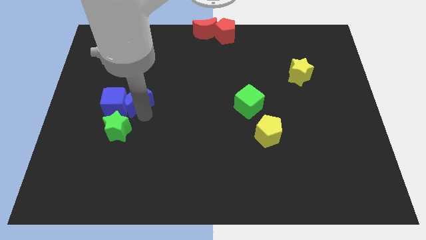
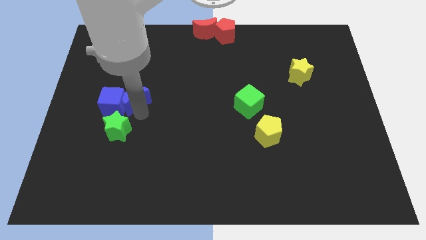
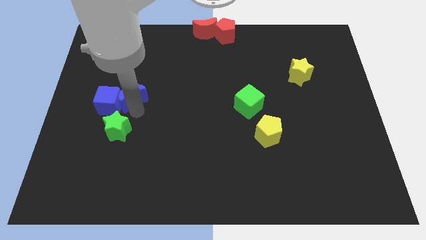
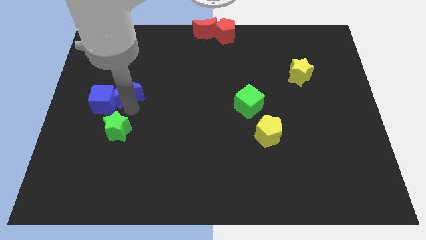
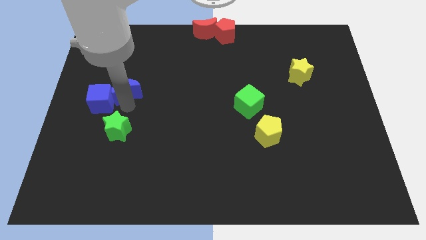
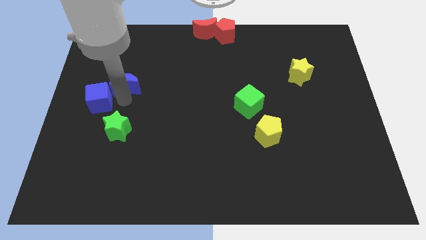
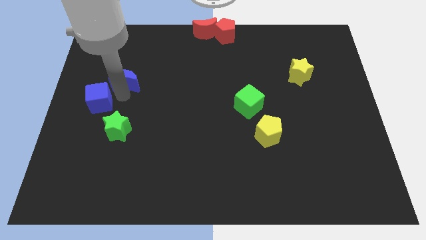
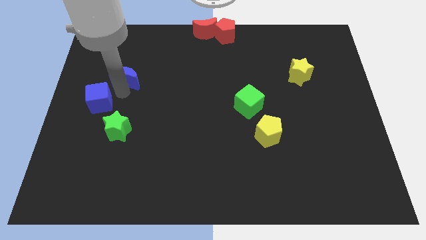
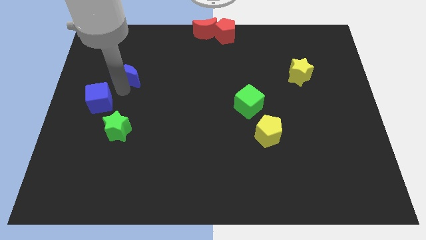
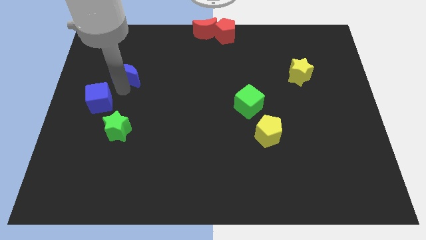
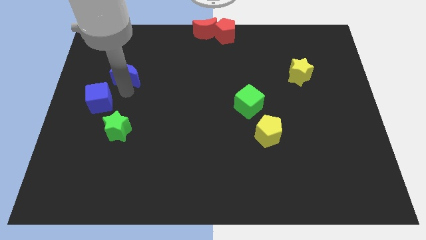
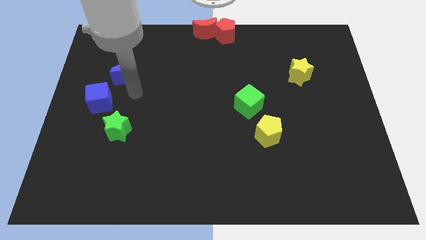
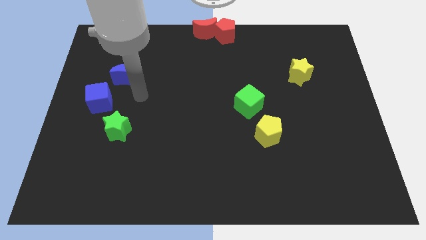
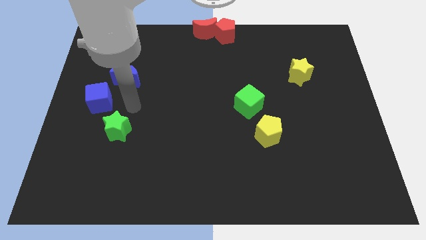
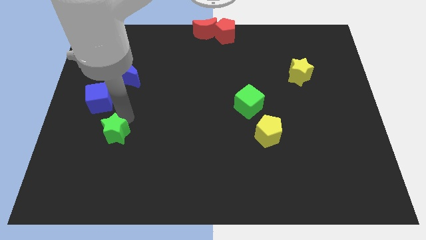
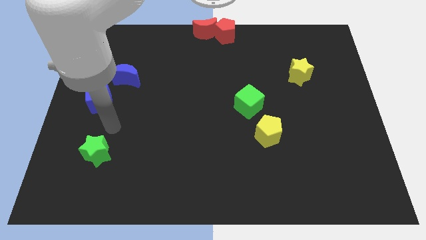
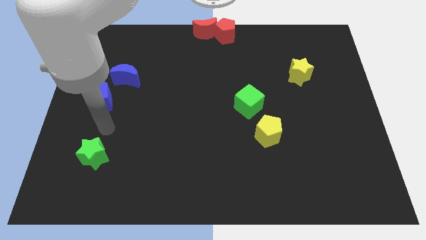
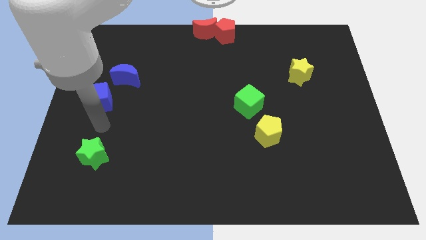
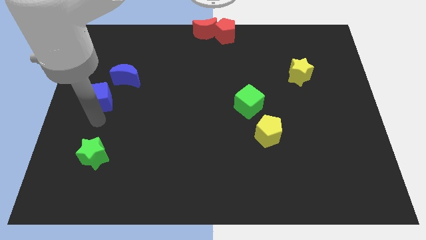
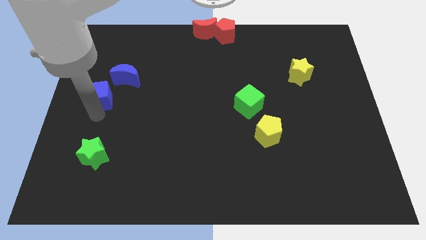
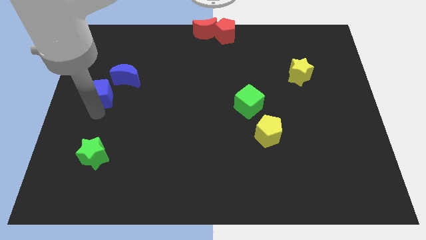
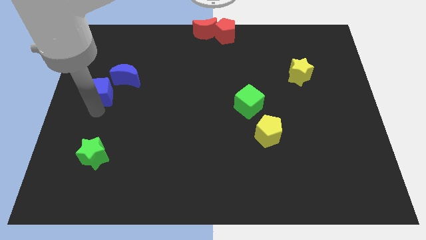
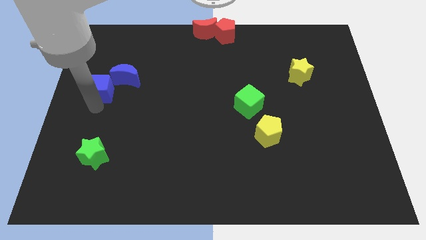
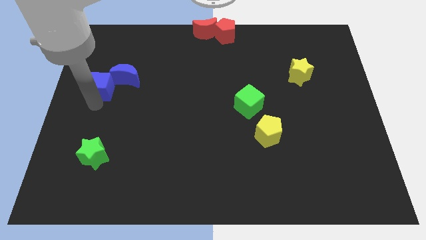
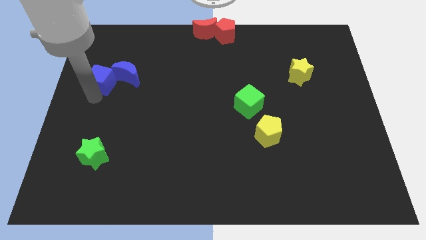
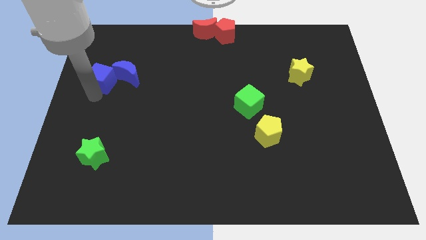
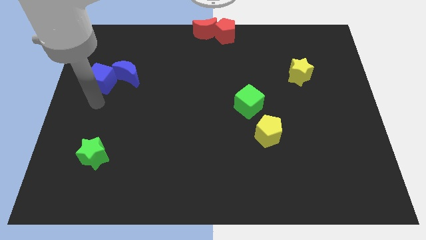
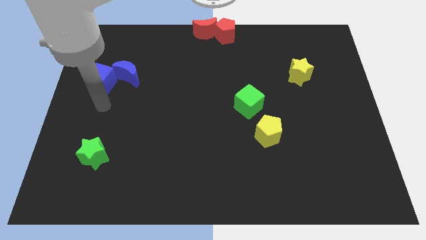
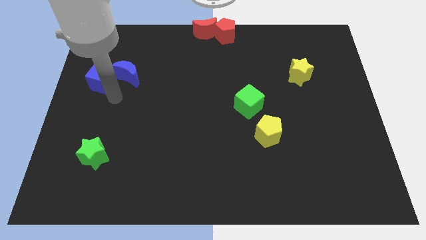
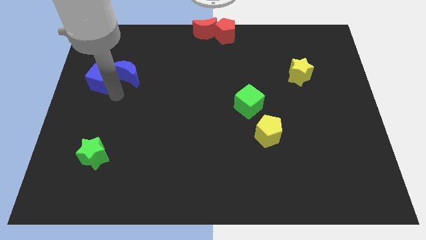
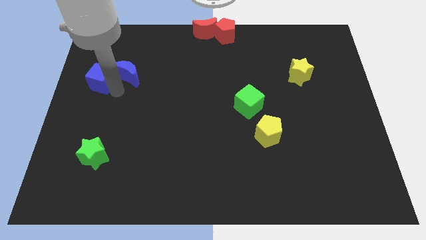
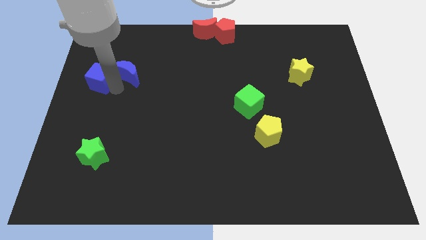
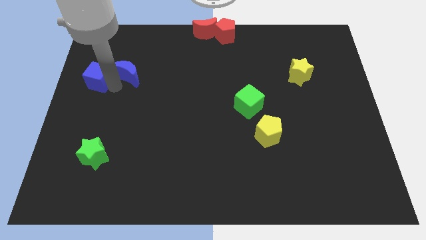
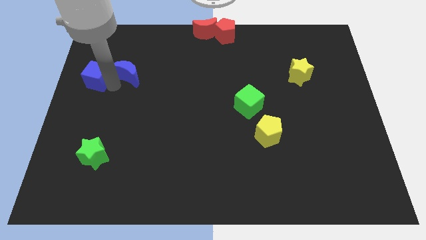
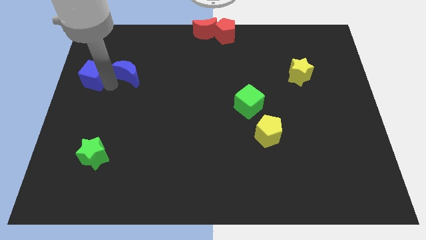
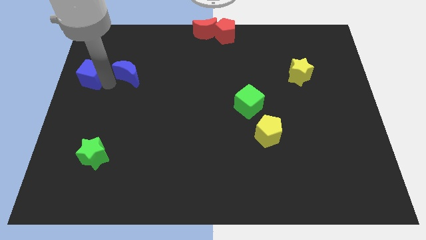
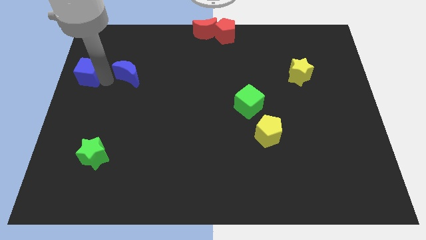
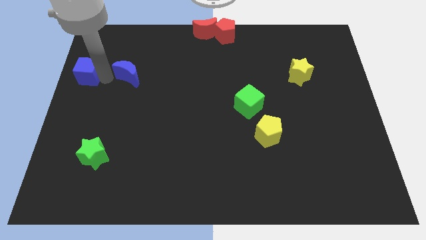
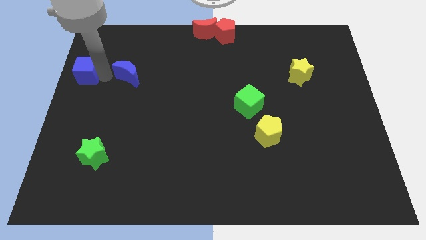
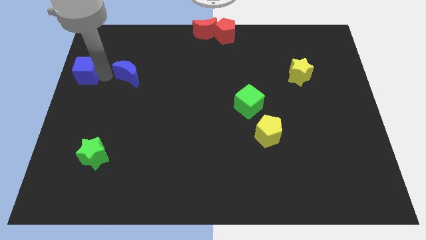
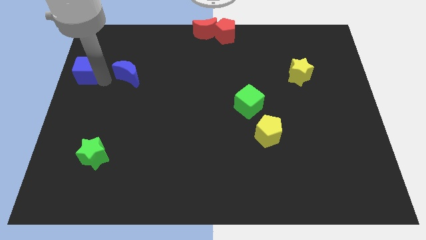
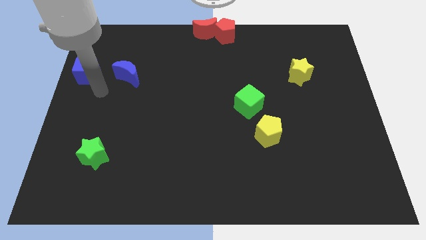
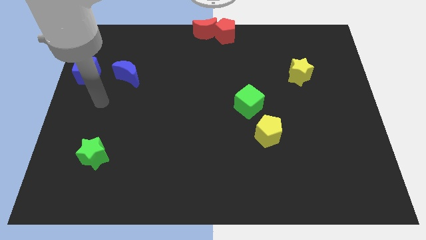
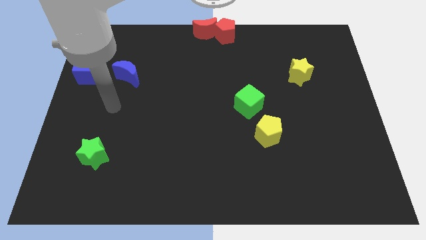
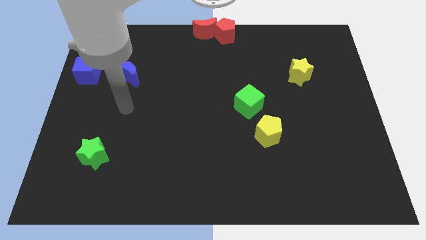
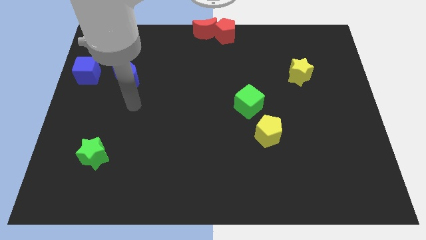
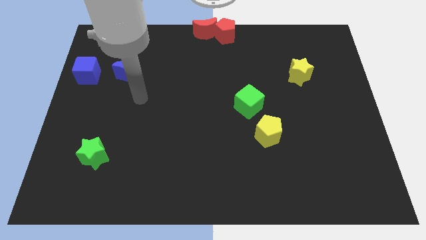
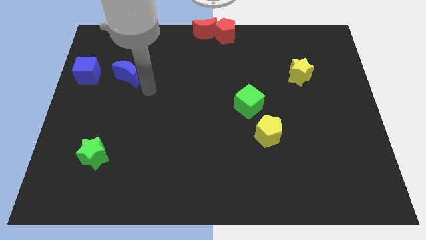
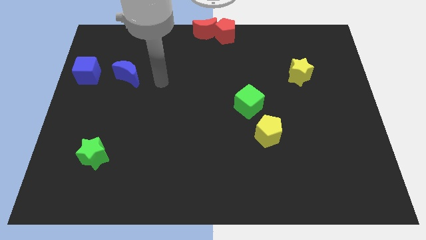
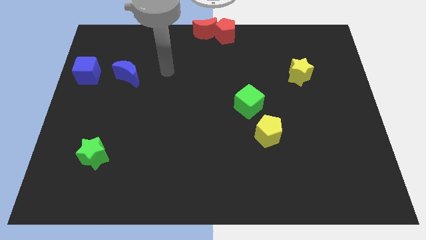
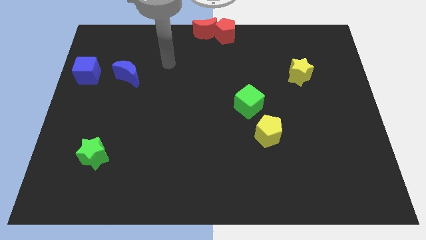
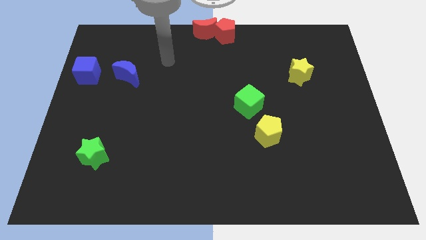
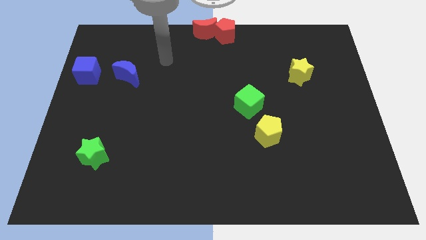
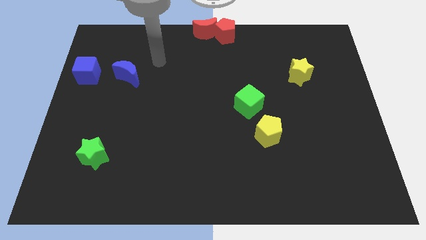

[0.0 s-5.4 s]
separate the blue blocks from green star

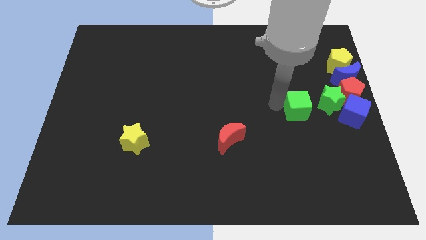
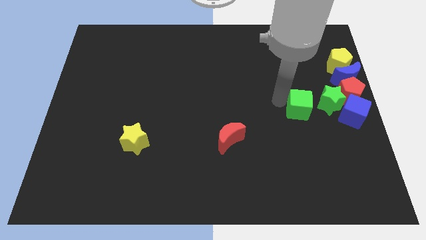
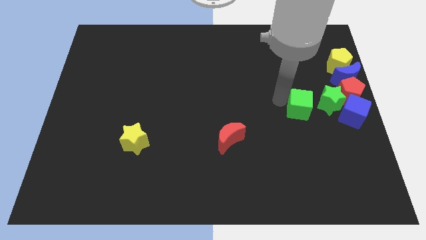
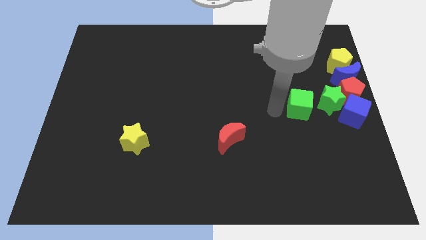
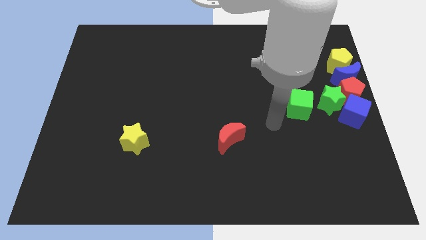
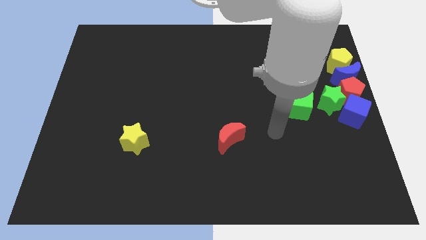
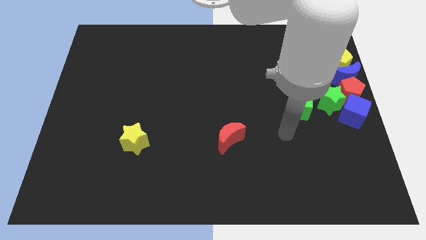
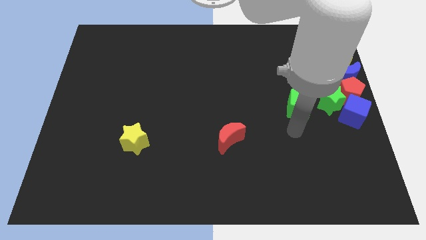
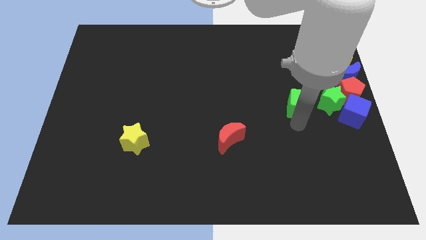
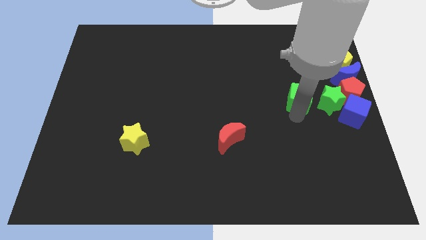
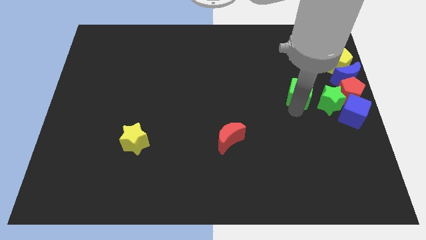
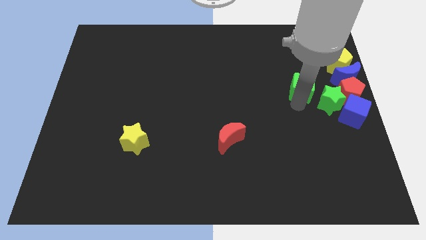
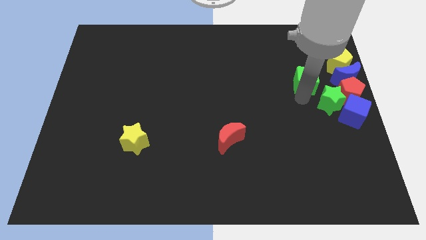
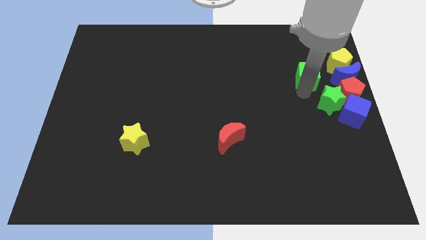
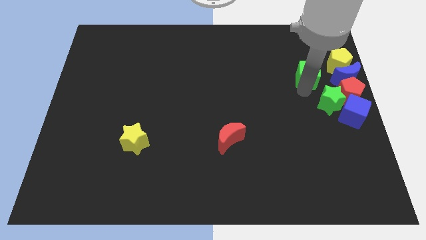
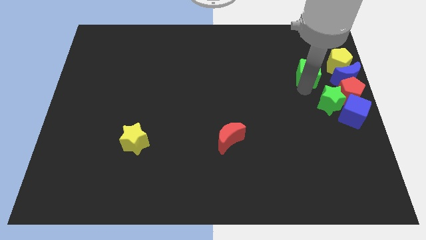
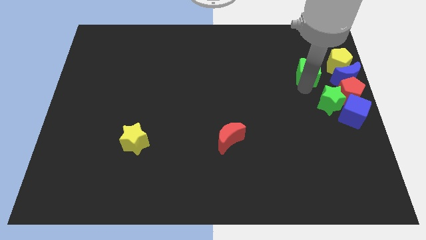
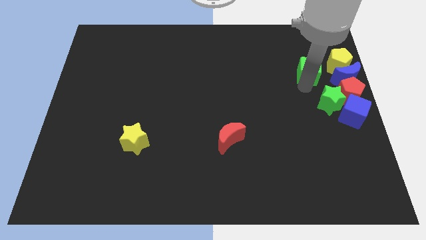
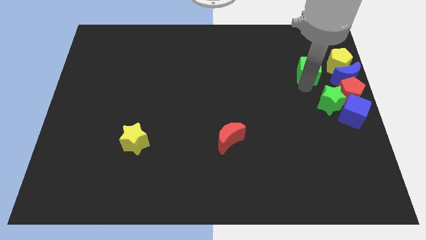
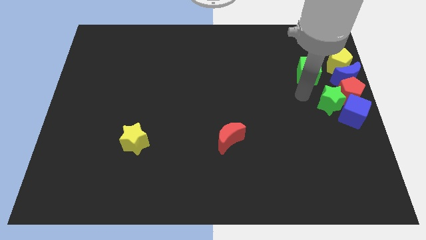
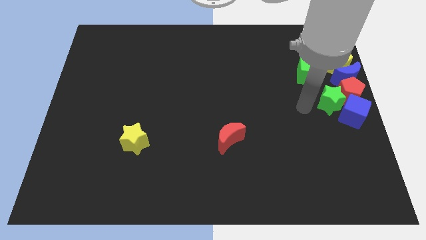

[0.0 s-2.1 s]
put the green cube on the left side of the blue crescent

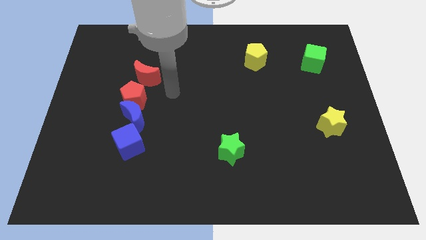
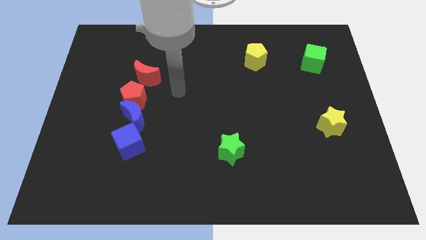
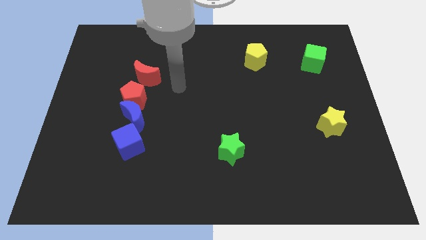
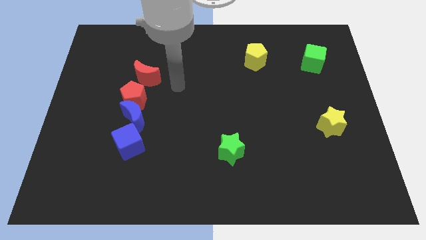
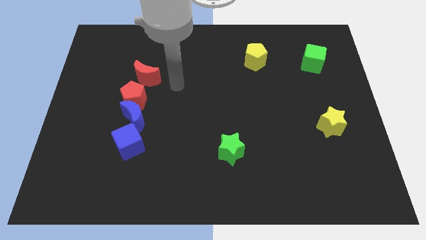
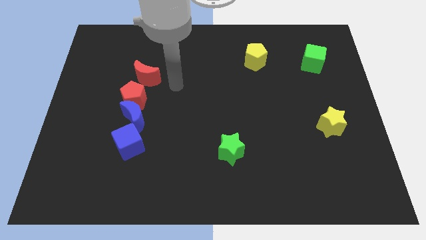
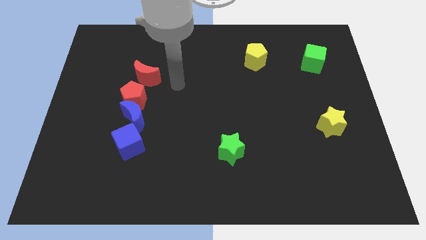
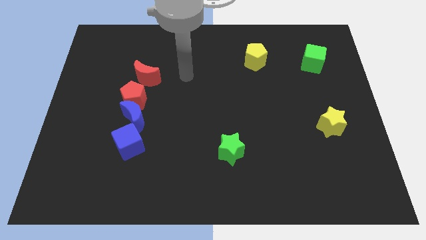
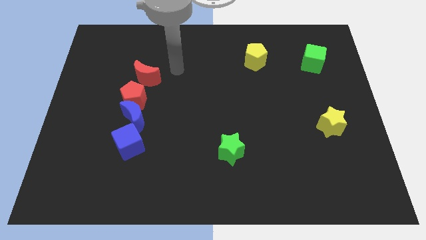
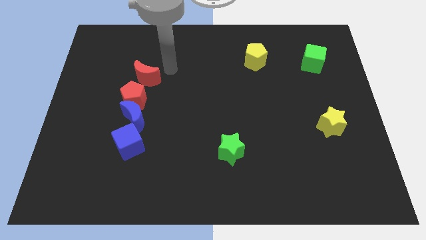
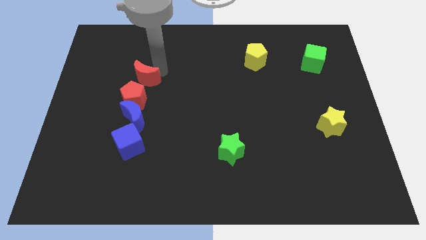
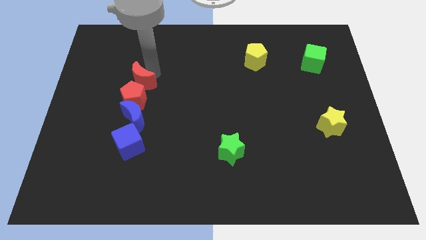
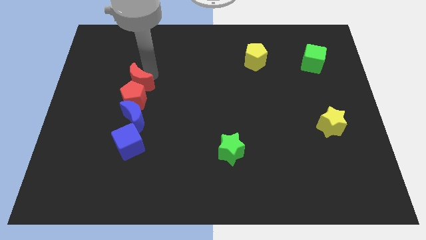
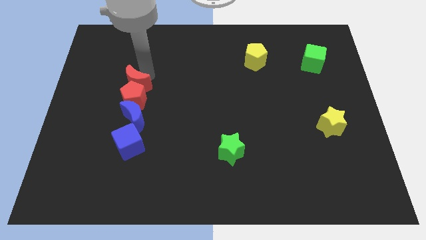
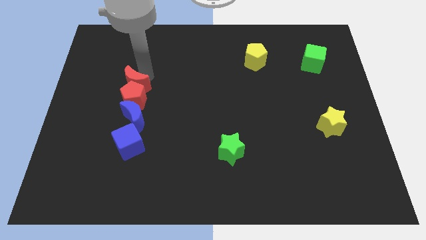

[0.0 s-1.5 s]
push the red crescent into the red pentagon
